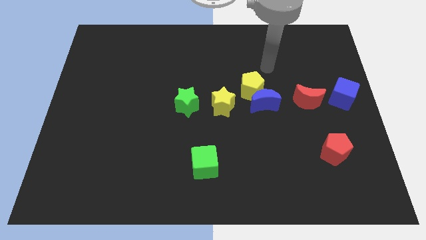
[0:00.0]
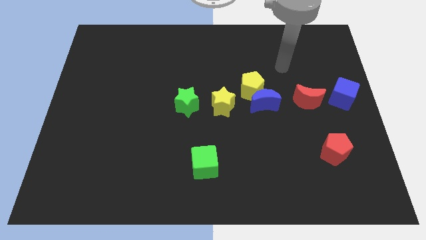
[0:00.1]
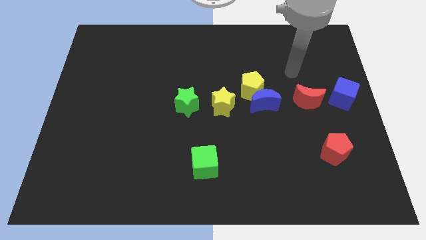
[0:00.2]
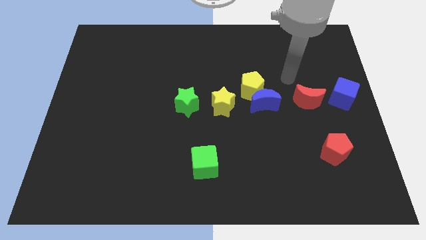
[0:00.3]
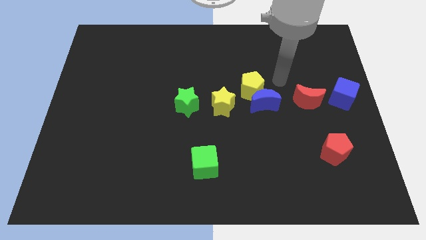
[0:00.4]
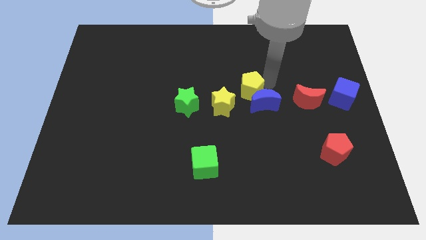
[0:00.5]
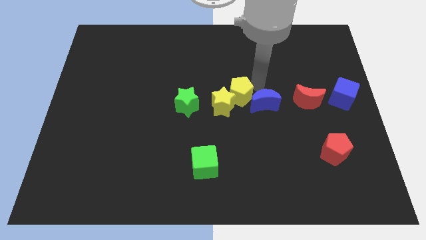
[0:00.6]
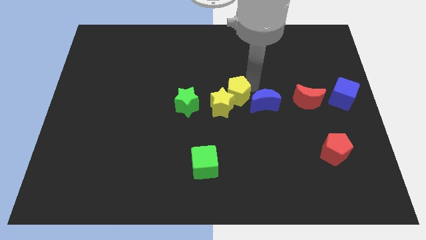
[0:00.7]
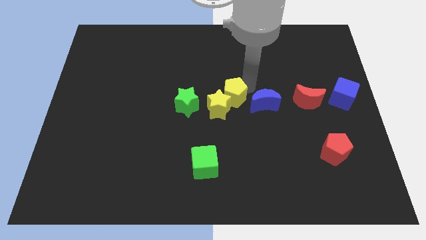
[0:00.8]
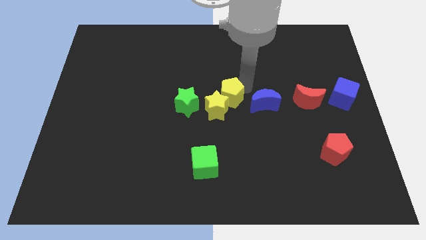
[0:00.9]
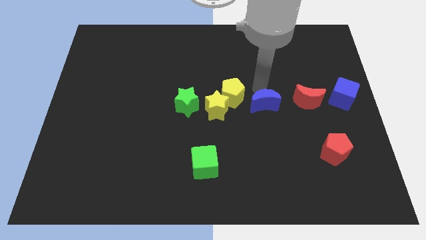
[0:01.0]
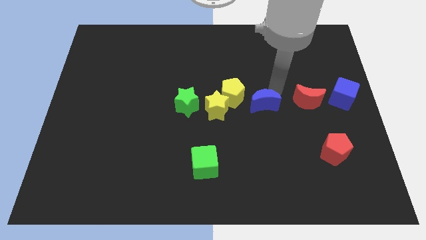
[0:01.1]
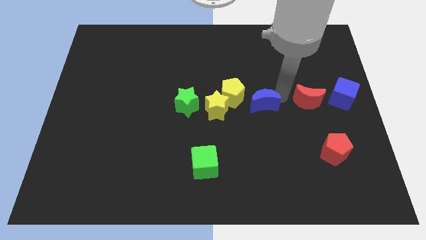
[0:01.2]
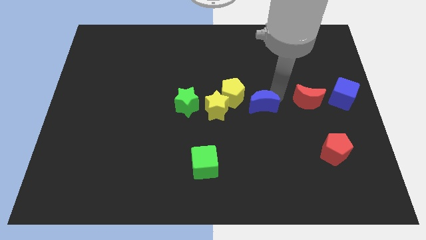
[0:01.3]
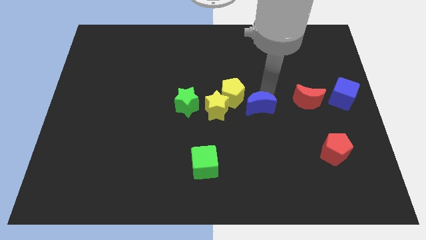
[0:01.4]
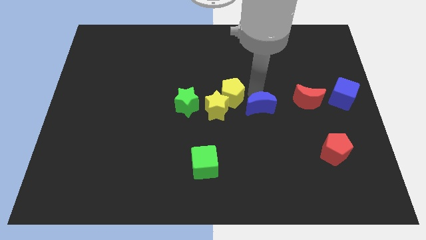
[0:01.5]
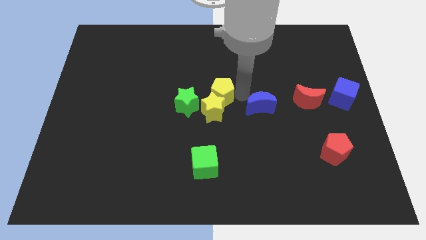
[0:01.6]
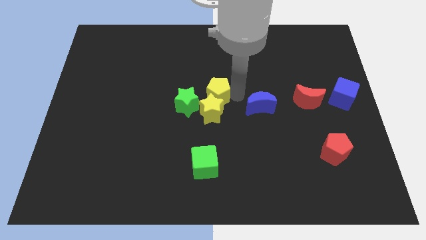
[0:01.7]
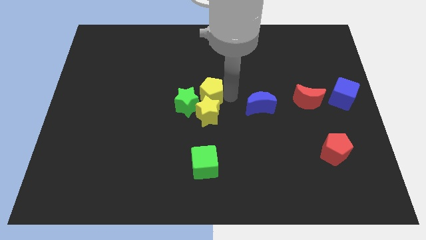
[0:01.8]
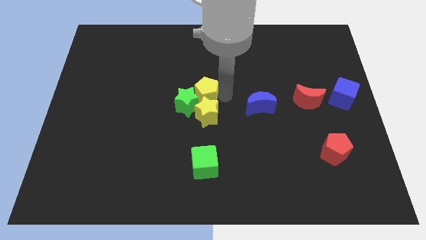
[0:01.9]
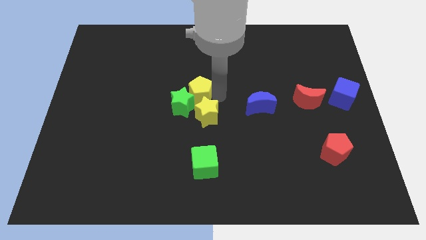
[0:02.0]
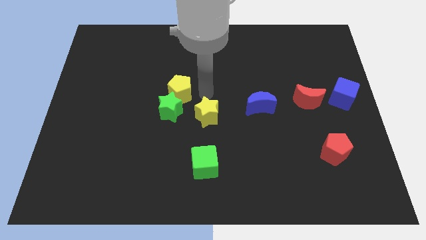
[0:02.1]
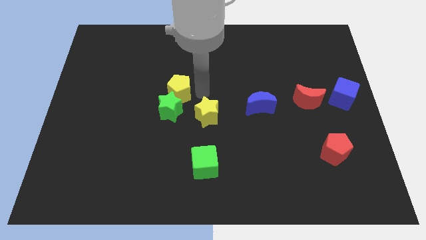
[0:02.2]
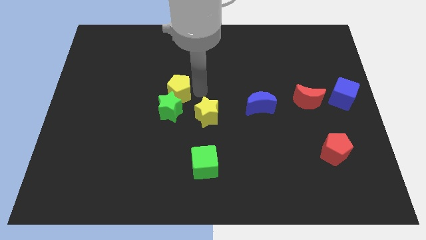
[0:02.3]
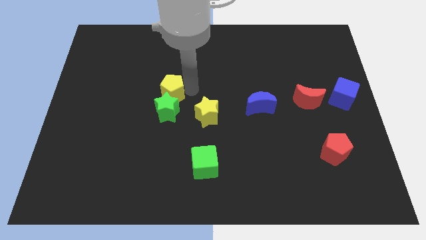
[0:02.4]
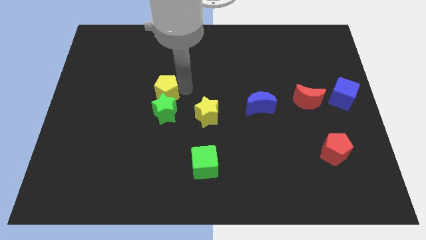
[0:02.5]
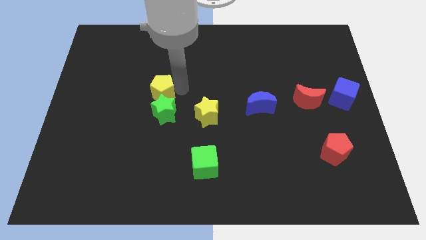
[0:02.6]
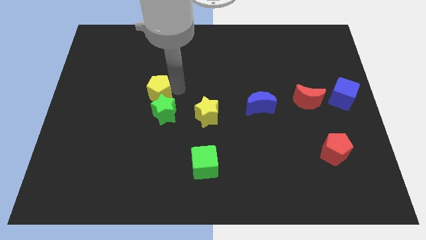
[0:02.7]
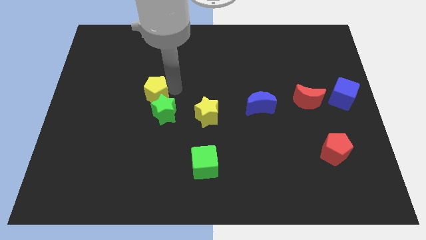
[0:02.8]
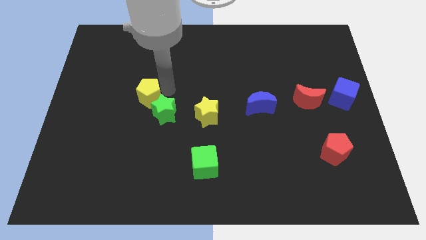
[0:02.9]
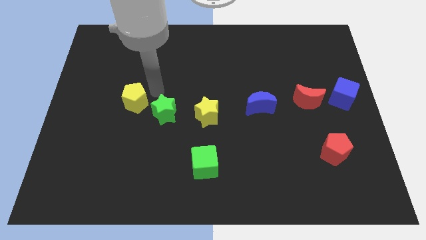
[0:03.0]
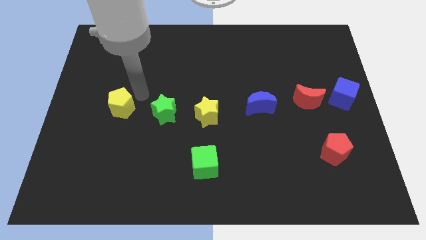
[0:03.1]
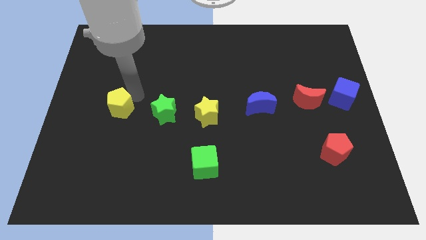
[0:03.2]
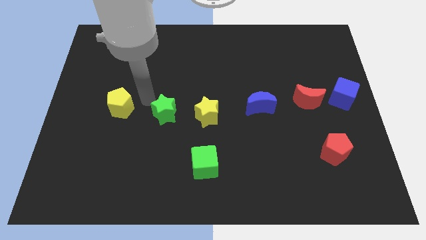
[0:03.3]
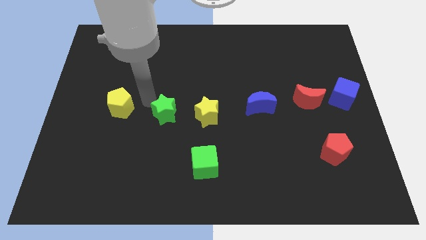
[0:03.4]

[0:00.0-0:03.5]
place the yellow pentagon to the left of the green star

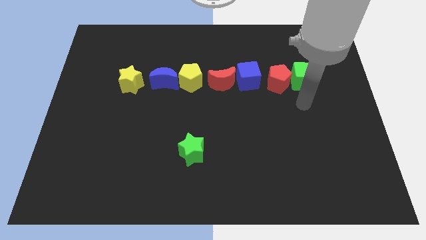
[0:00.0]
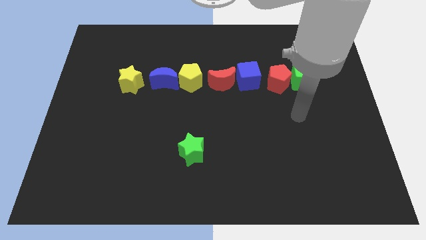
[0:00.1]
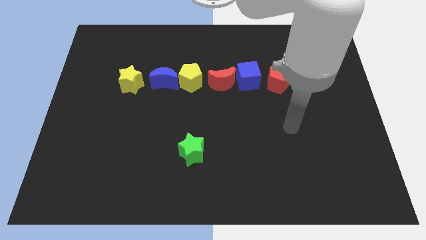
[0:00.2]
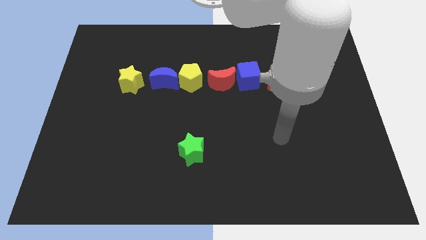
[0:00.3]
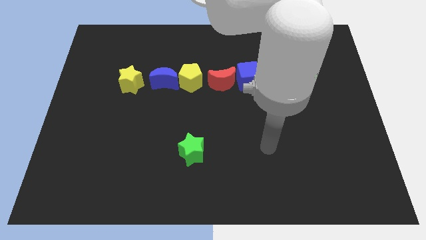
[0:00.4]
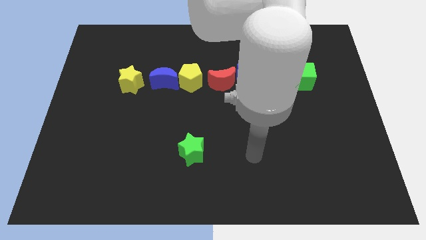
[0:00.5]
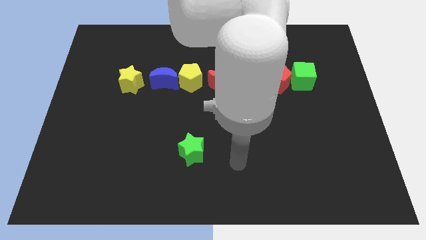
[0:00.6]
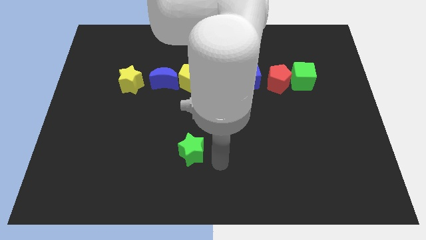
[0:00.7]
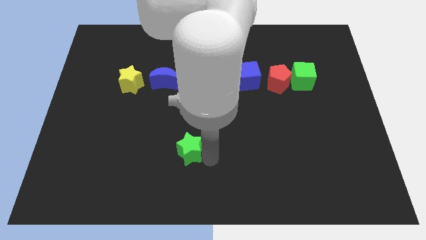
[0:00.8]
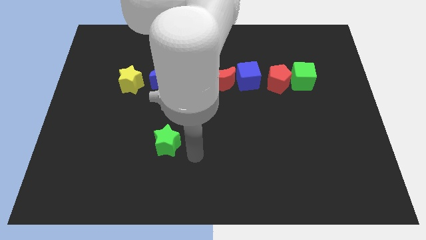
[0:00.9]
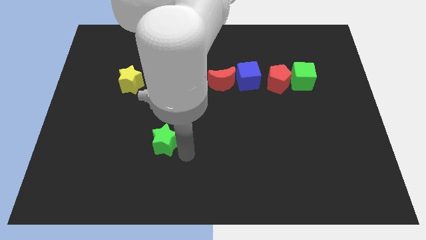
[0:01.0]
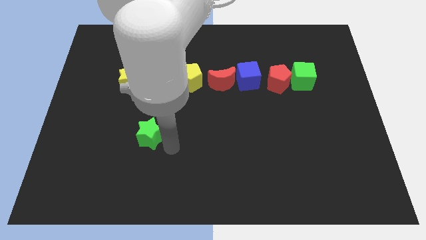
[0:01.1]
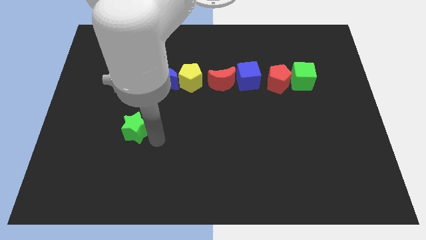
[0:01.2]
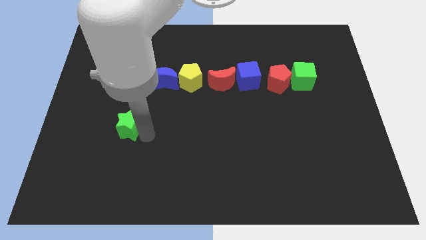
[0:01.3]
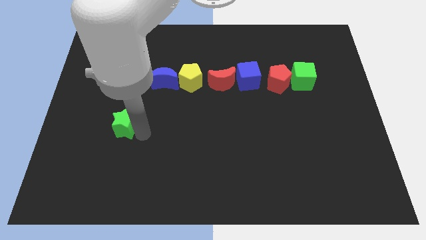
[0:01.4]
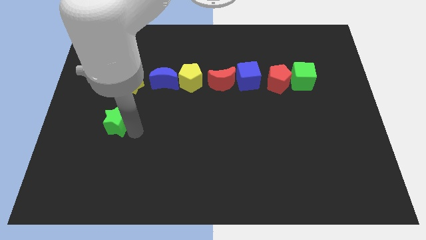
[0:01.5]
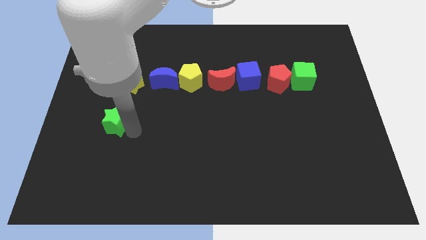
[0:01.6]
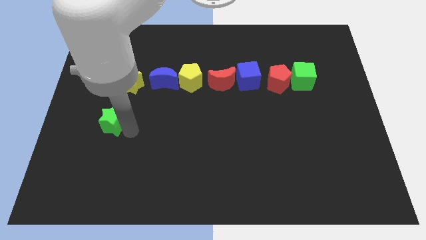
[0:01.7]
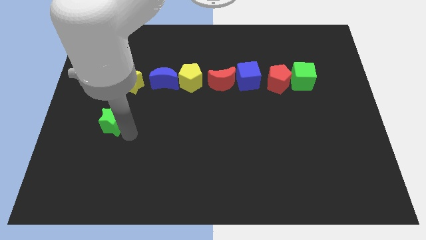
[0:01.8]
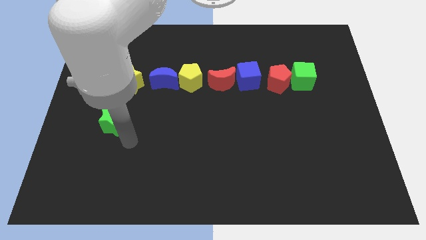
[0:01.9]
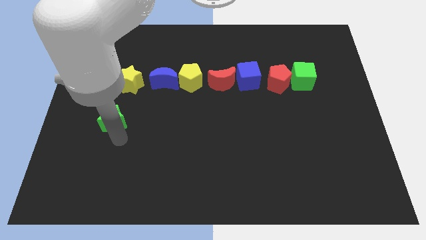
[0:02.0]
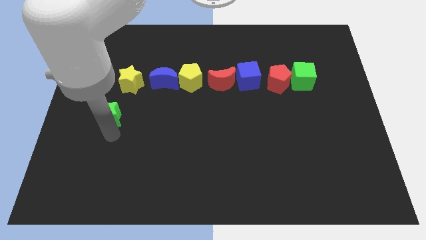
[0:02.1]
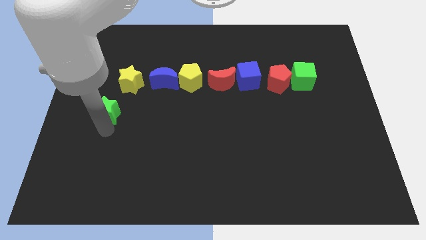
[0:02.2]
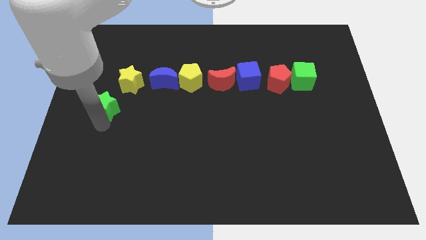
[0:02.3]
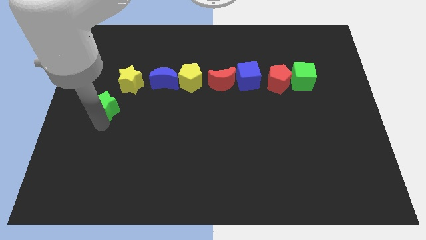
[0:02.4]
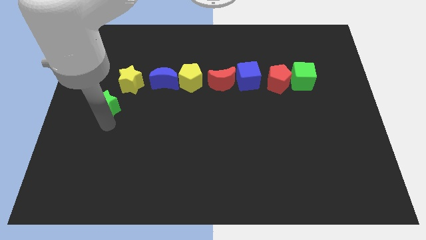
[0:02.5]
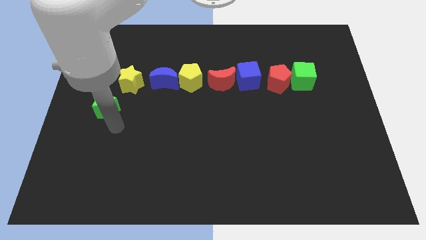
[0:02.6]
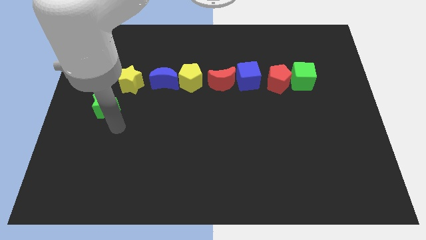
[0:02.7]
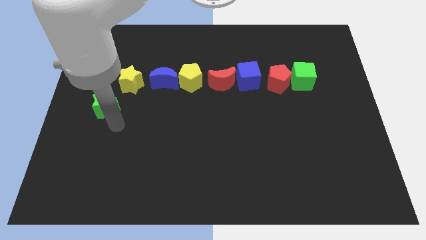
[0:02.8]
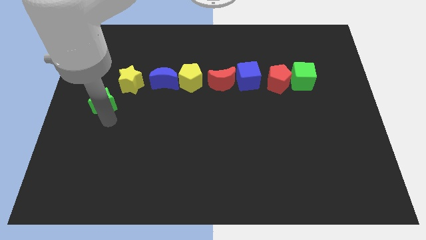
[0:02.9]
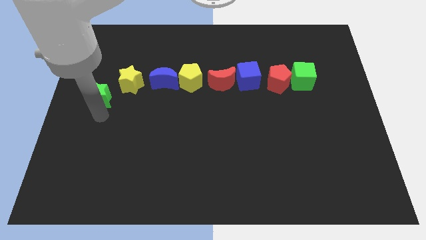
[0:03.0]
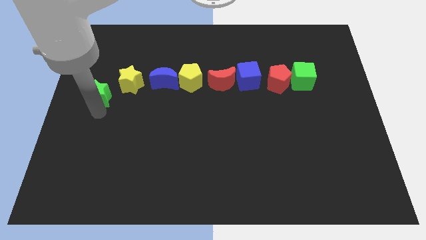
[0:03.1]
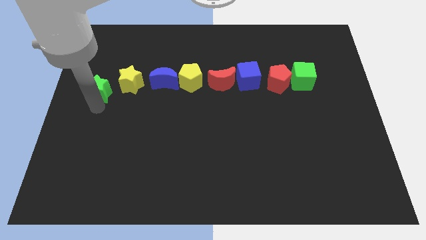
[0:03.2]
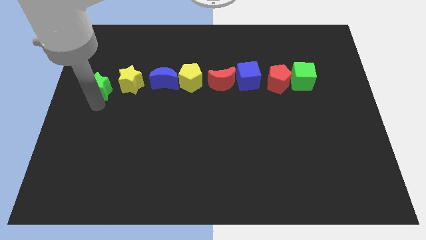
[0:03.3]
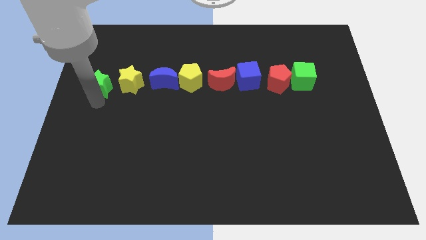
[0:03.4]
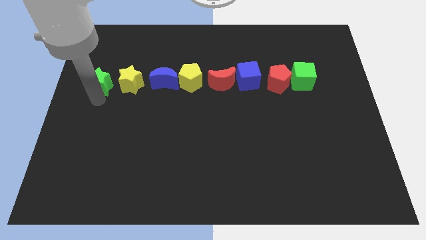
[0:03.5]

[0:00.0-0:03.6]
move the green star towards the left to the yellow star

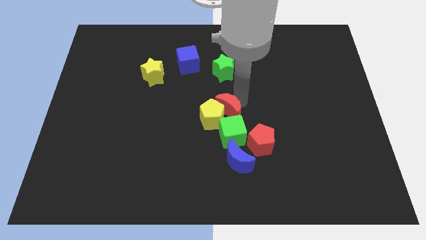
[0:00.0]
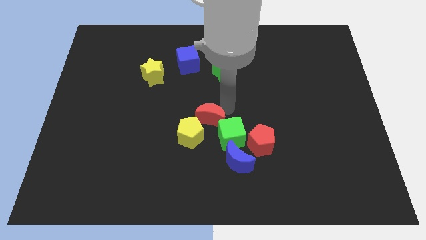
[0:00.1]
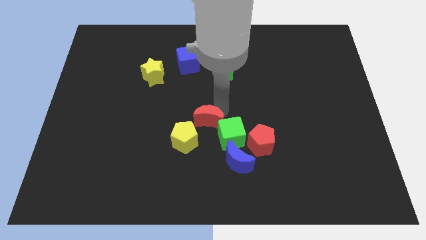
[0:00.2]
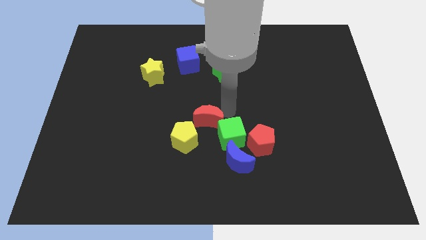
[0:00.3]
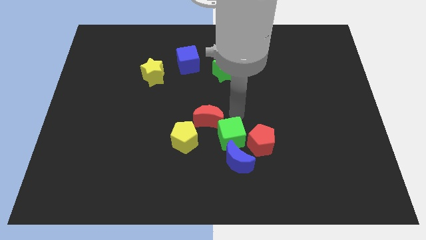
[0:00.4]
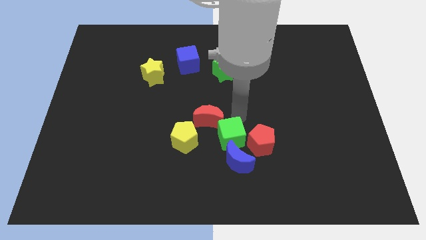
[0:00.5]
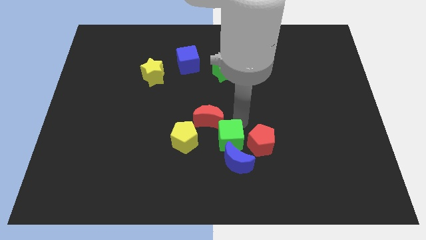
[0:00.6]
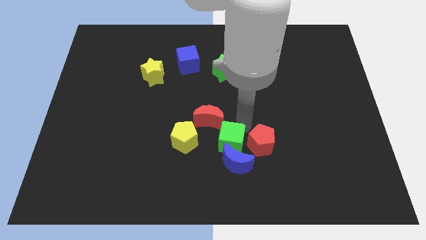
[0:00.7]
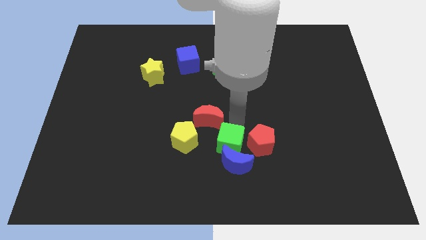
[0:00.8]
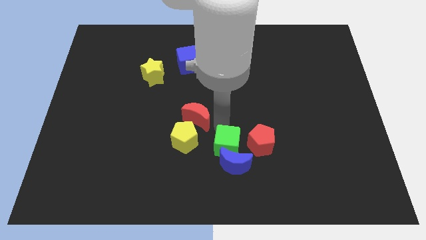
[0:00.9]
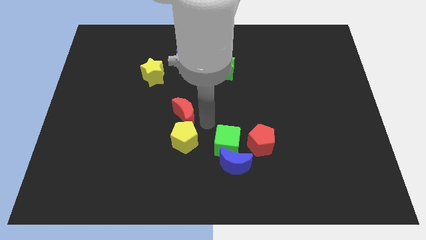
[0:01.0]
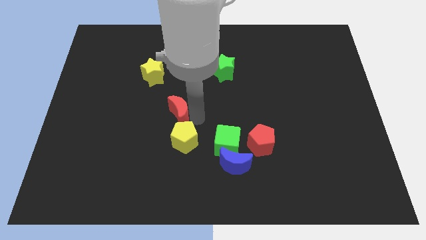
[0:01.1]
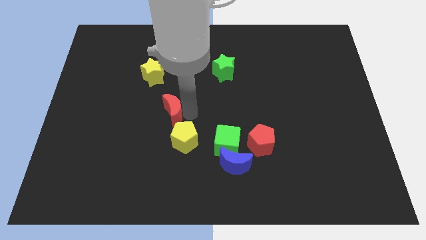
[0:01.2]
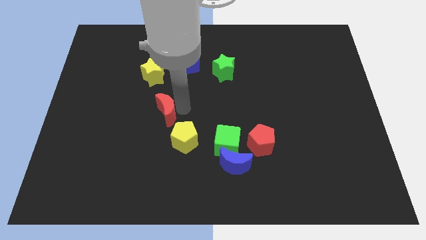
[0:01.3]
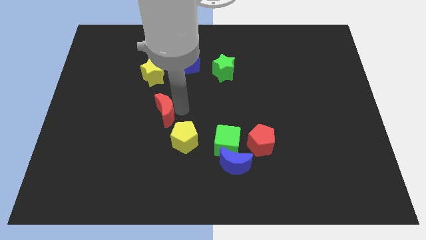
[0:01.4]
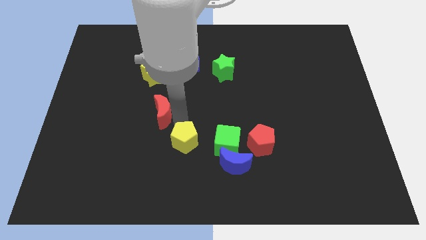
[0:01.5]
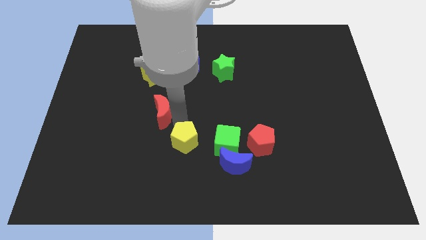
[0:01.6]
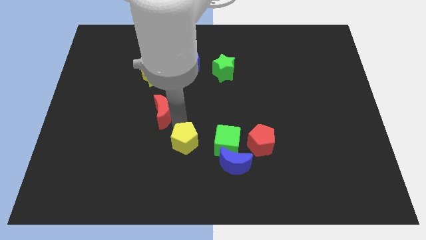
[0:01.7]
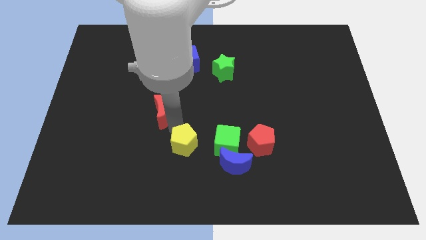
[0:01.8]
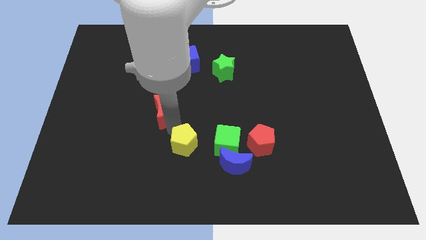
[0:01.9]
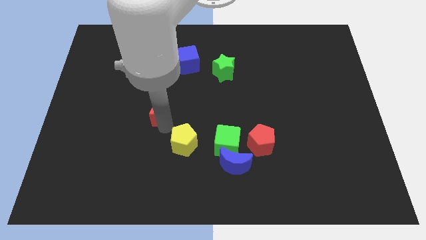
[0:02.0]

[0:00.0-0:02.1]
separate the red moon from the yellow pentagon
